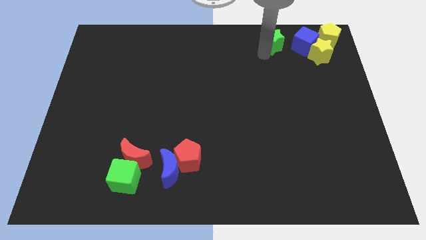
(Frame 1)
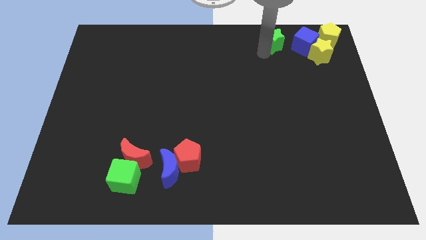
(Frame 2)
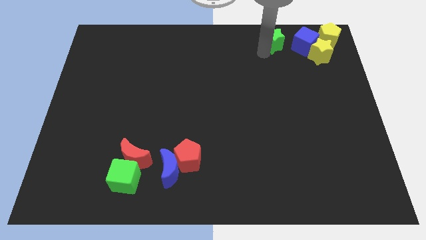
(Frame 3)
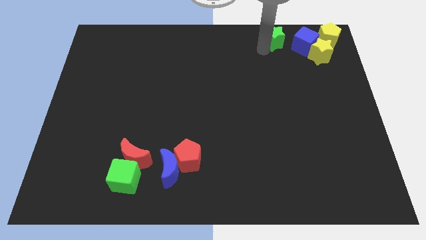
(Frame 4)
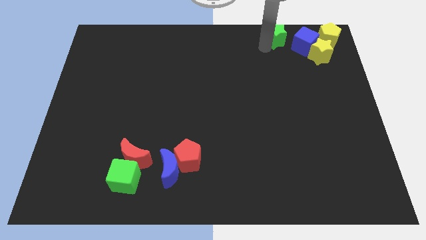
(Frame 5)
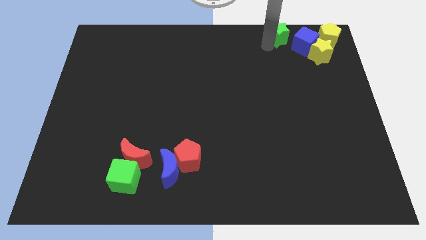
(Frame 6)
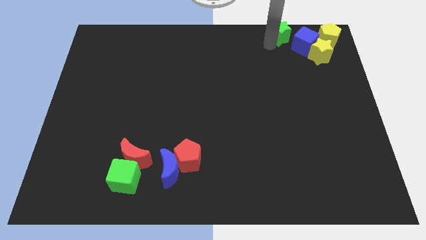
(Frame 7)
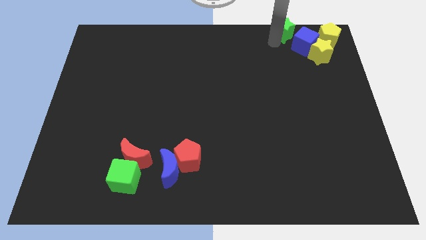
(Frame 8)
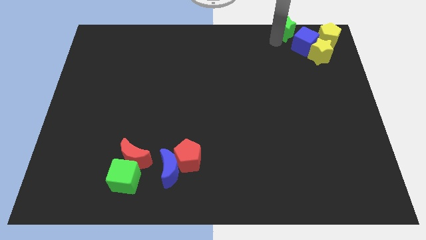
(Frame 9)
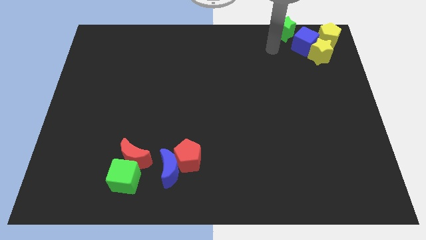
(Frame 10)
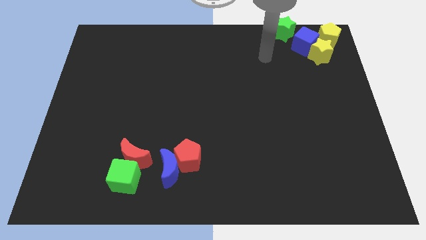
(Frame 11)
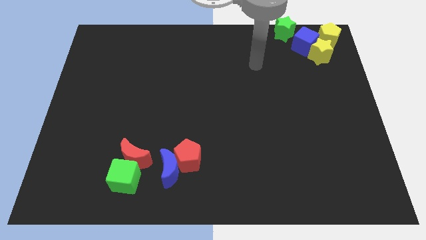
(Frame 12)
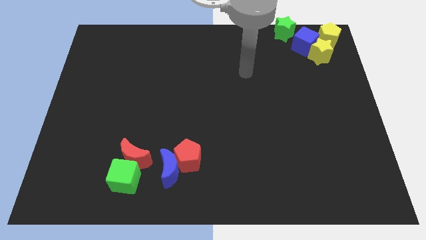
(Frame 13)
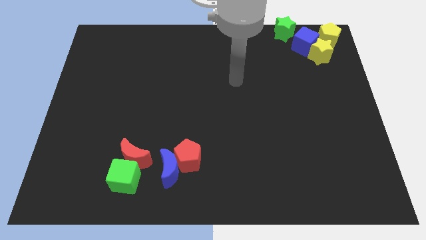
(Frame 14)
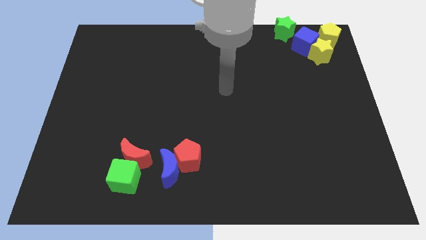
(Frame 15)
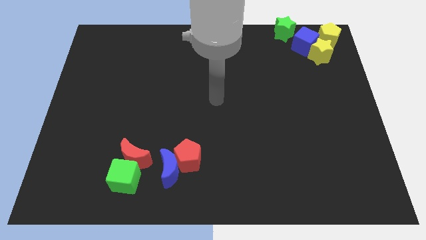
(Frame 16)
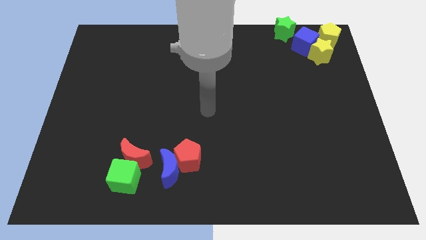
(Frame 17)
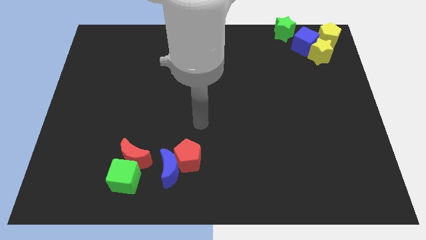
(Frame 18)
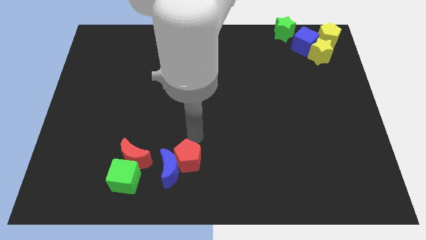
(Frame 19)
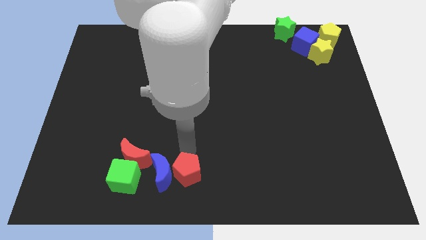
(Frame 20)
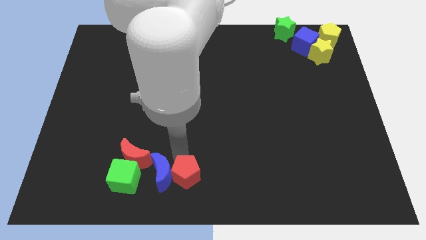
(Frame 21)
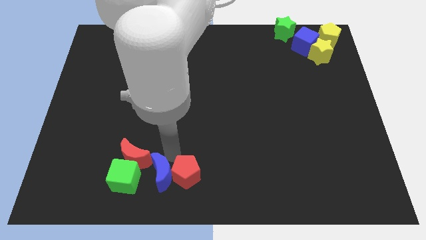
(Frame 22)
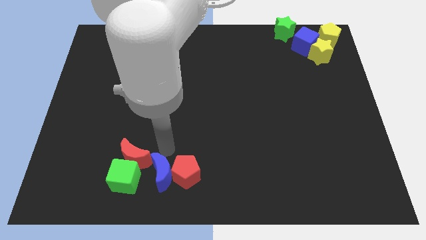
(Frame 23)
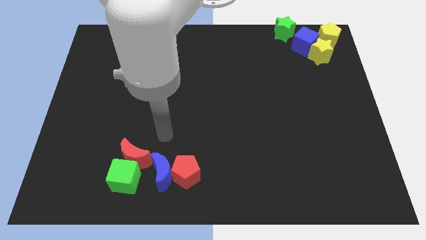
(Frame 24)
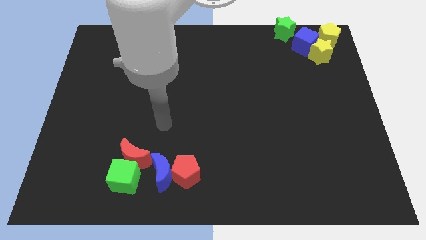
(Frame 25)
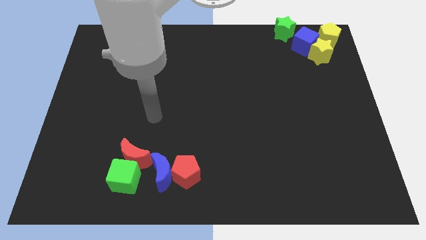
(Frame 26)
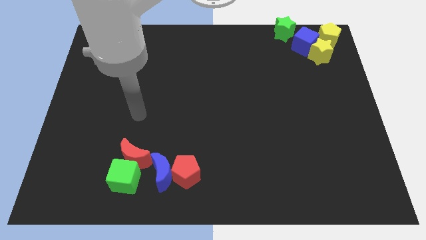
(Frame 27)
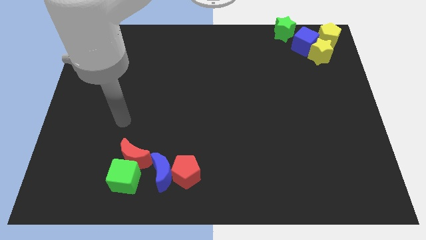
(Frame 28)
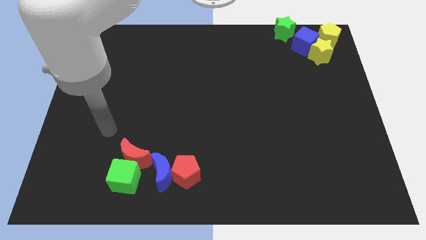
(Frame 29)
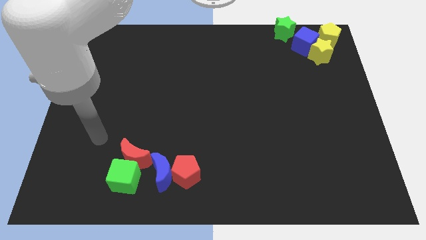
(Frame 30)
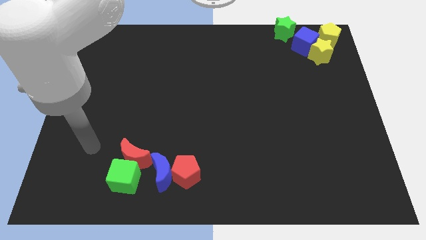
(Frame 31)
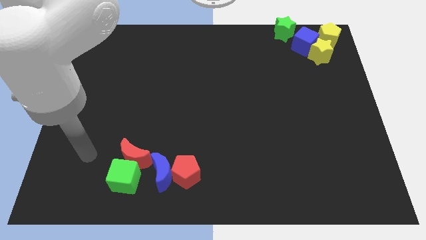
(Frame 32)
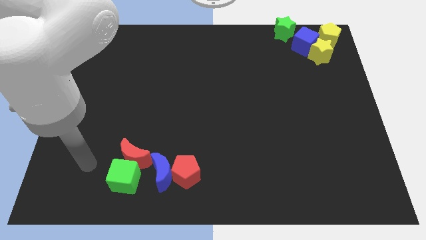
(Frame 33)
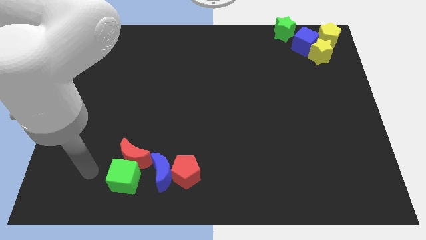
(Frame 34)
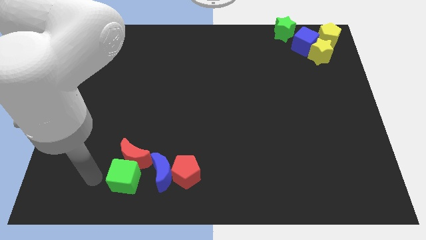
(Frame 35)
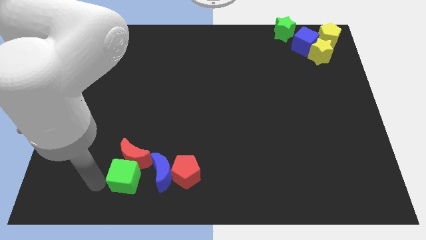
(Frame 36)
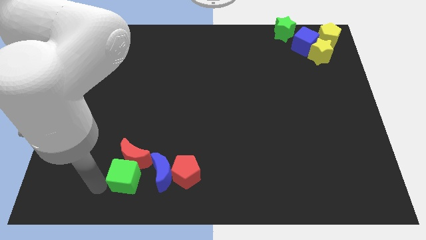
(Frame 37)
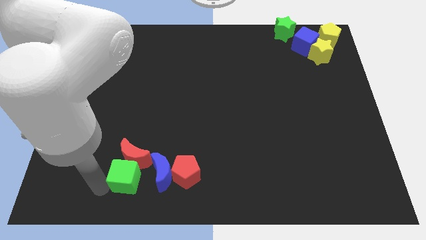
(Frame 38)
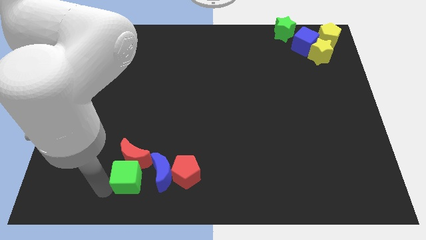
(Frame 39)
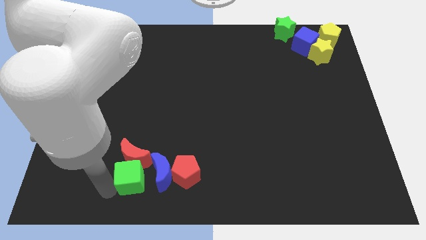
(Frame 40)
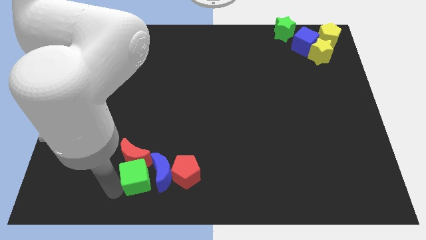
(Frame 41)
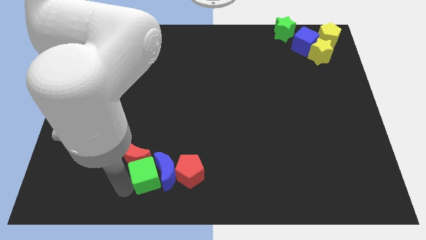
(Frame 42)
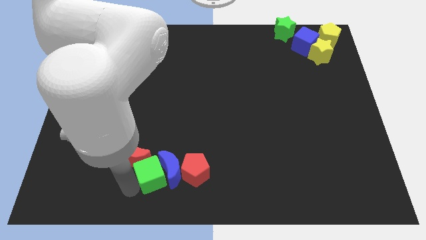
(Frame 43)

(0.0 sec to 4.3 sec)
move green cube into blue crescent

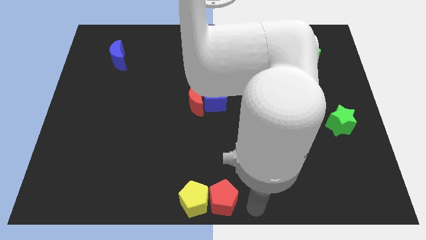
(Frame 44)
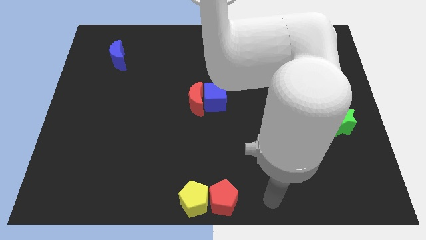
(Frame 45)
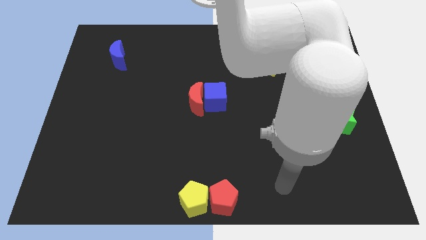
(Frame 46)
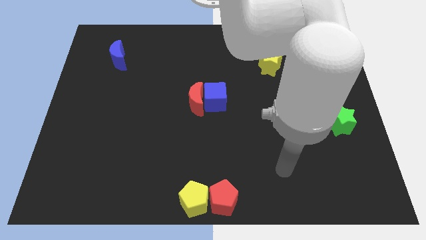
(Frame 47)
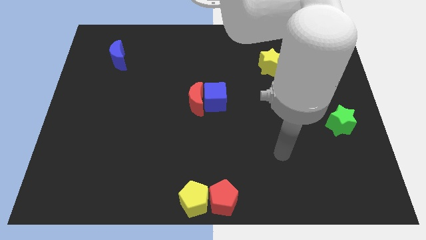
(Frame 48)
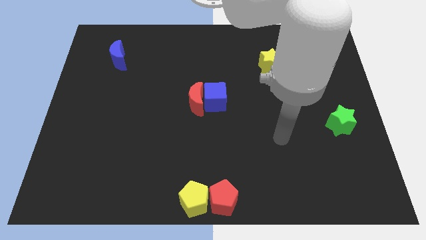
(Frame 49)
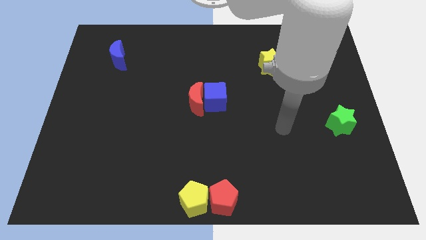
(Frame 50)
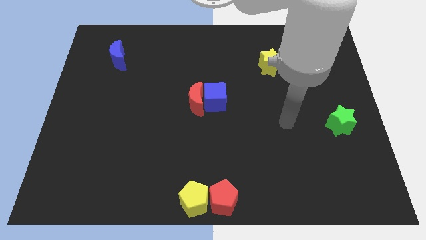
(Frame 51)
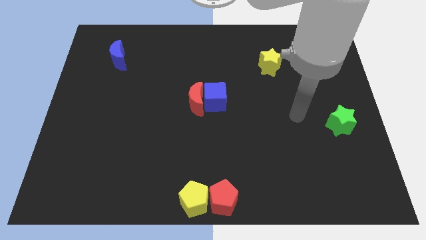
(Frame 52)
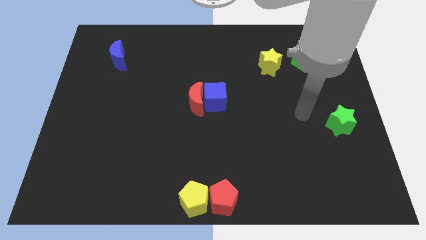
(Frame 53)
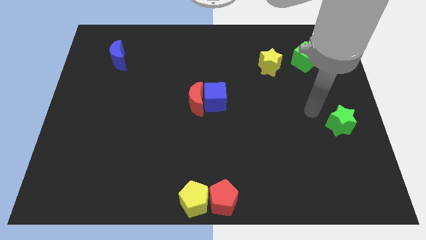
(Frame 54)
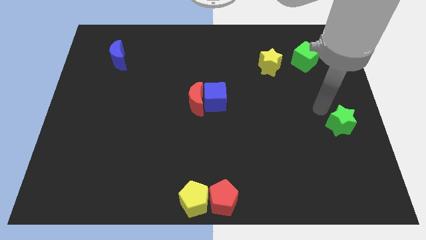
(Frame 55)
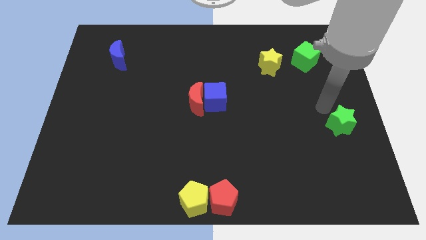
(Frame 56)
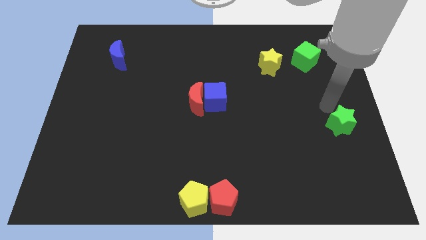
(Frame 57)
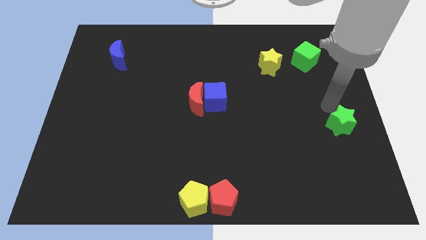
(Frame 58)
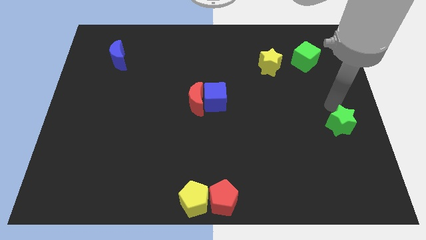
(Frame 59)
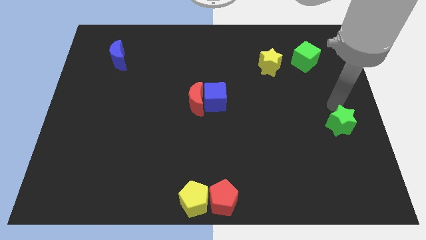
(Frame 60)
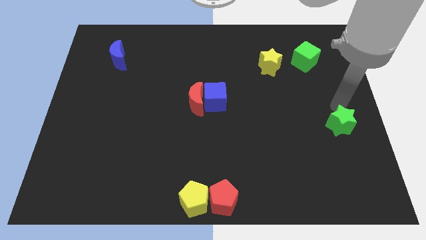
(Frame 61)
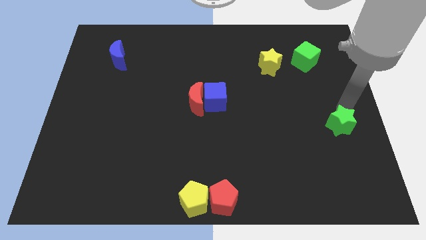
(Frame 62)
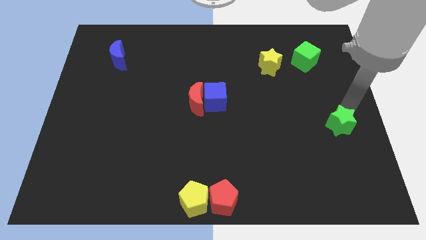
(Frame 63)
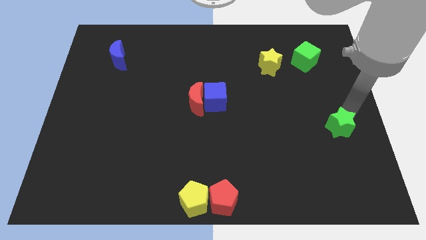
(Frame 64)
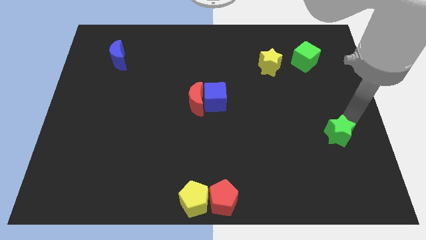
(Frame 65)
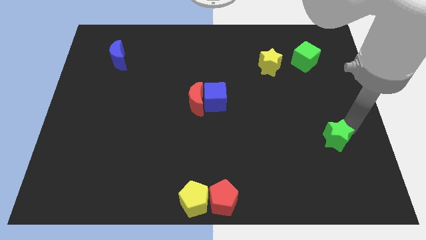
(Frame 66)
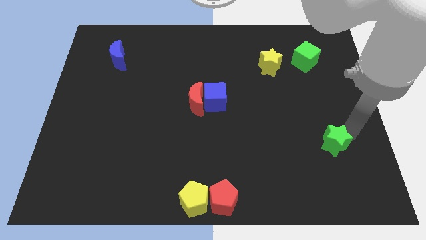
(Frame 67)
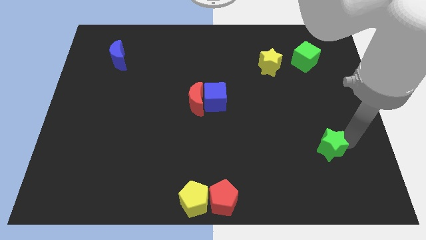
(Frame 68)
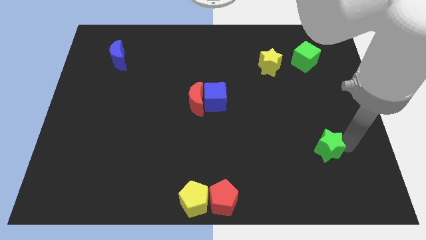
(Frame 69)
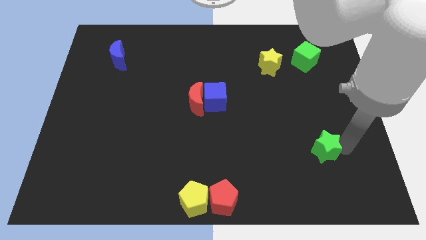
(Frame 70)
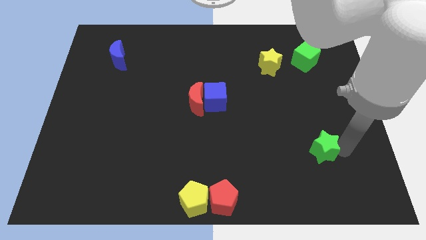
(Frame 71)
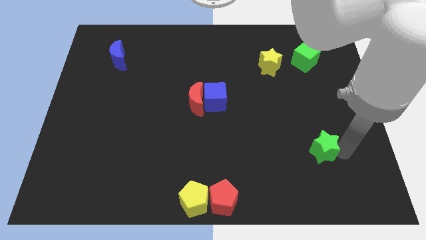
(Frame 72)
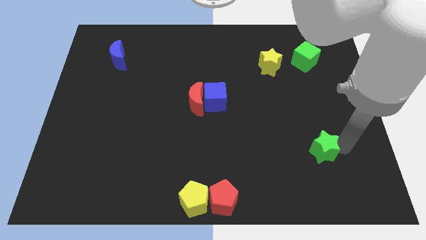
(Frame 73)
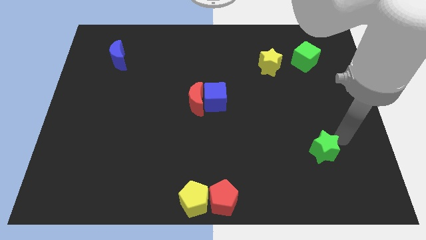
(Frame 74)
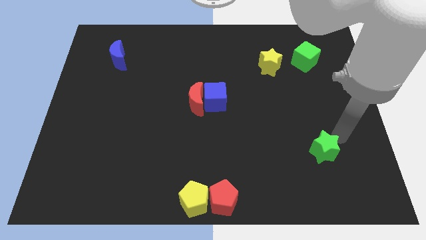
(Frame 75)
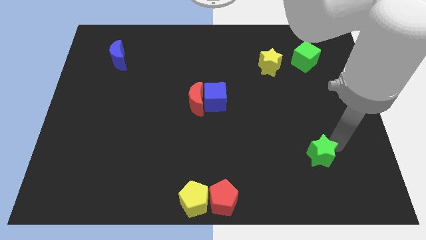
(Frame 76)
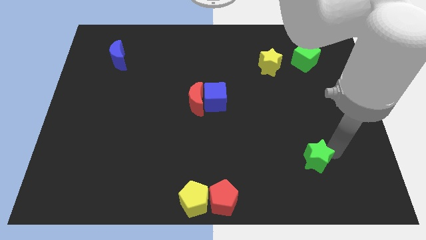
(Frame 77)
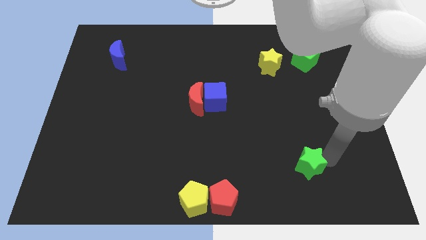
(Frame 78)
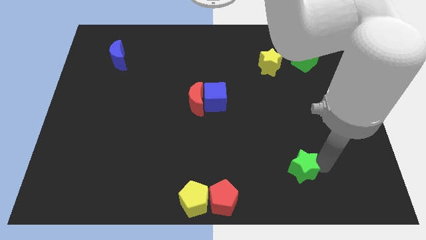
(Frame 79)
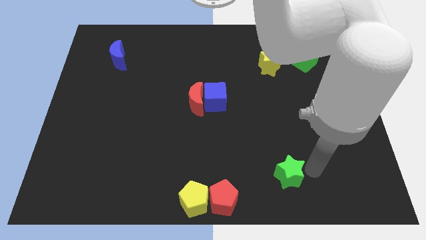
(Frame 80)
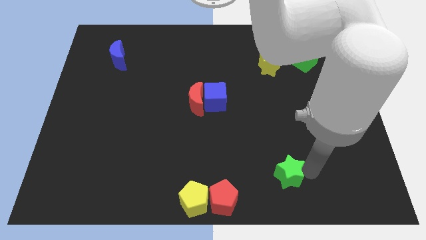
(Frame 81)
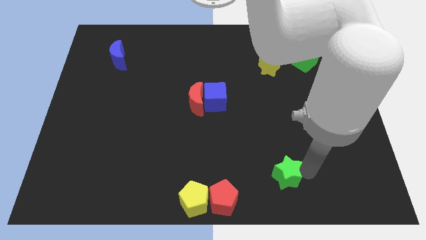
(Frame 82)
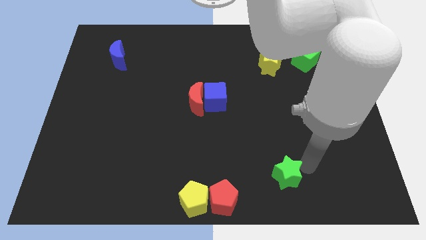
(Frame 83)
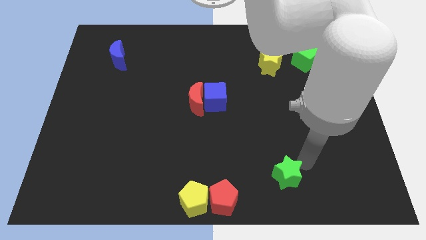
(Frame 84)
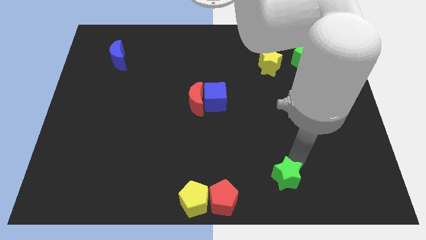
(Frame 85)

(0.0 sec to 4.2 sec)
move the green star to the top right of the red pentagon

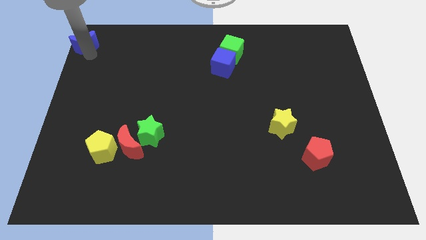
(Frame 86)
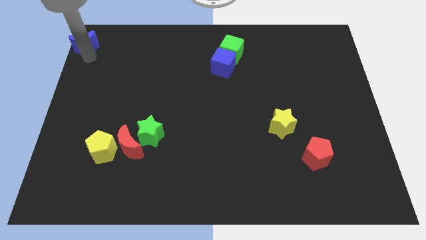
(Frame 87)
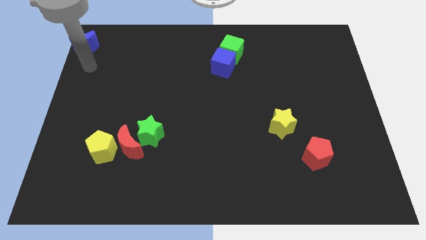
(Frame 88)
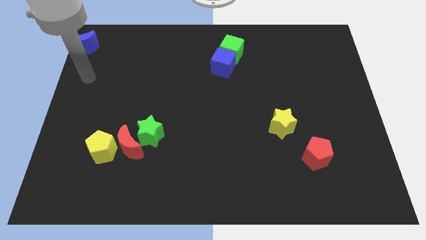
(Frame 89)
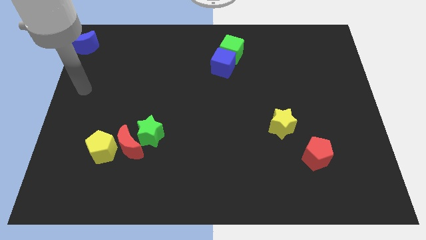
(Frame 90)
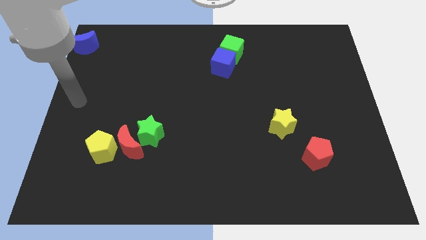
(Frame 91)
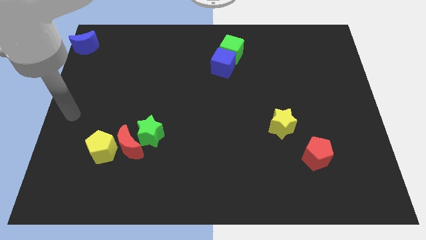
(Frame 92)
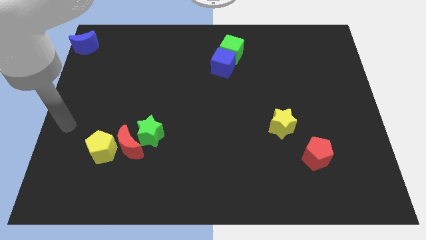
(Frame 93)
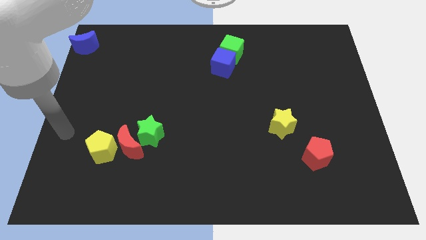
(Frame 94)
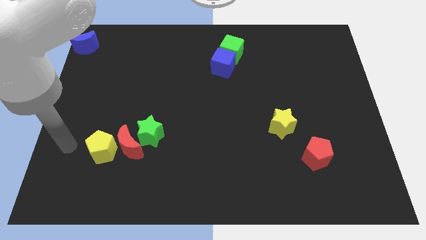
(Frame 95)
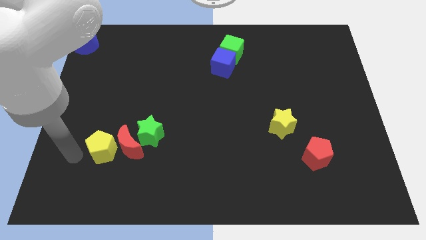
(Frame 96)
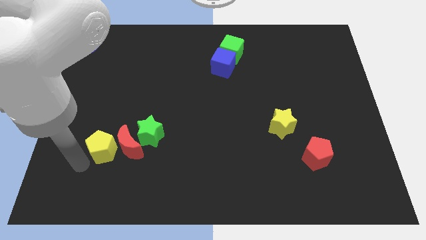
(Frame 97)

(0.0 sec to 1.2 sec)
go and point your arm at the left side of the yellow pentagon
